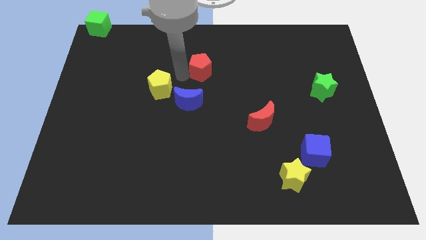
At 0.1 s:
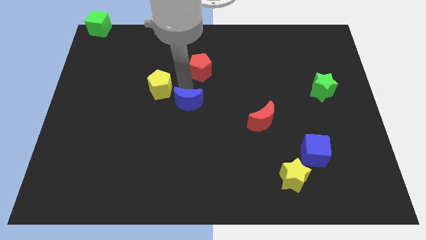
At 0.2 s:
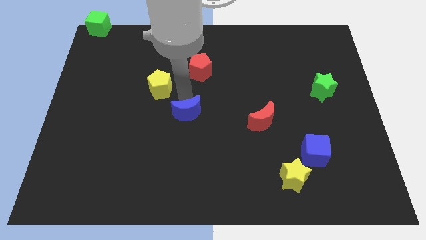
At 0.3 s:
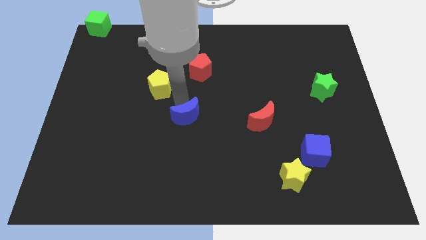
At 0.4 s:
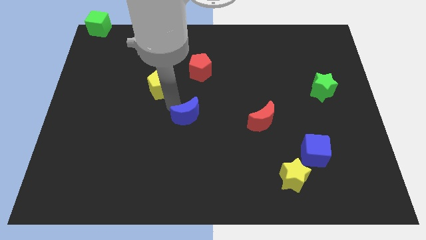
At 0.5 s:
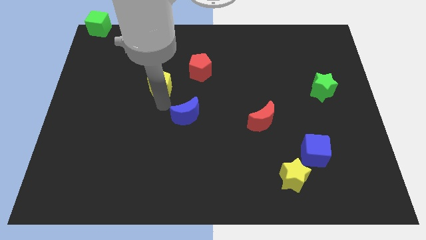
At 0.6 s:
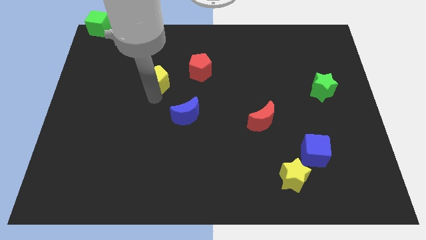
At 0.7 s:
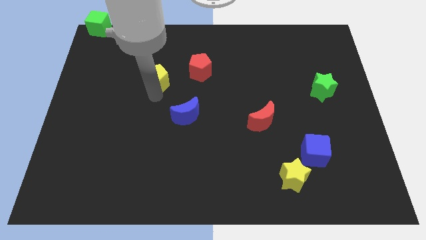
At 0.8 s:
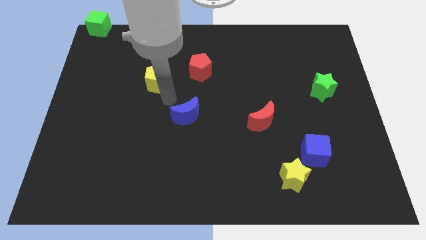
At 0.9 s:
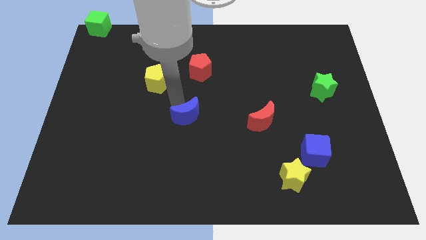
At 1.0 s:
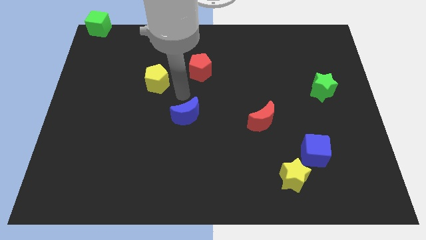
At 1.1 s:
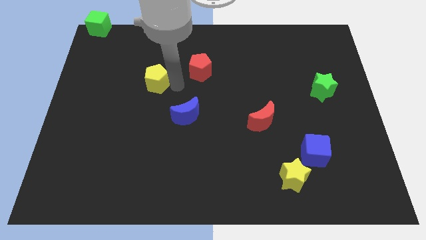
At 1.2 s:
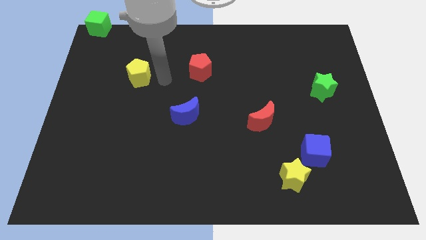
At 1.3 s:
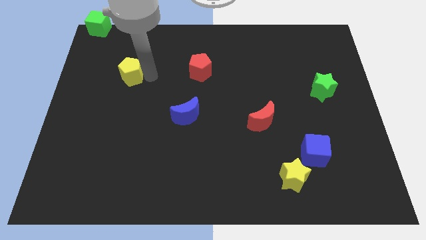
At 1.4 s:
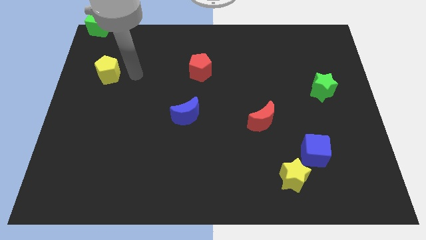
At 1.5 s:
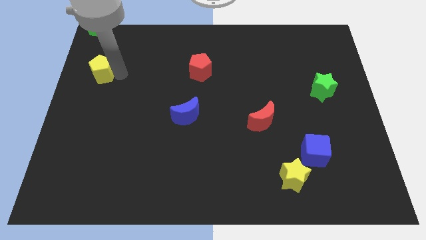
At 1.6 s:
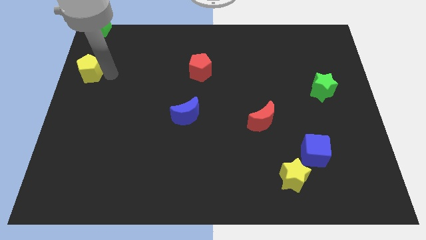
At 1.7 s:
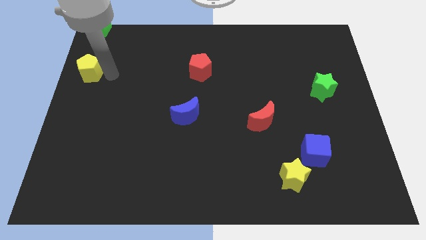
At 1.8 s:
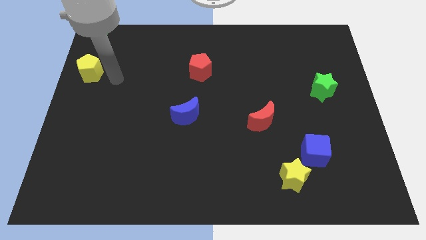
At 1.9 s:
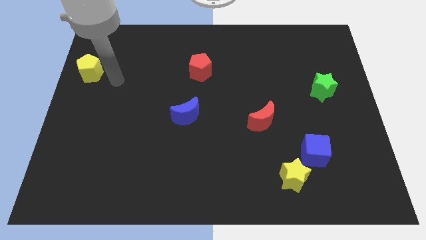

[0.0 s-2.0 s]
separate the yellow pentagon from the blue moon

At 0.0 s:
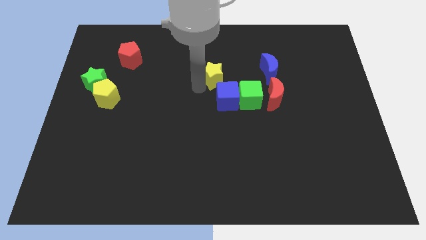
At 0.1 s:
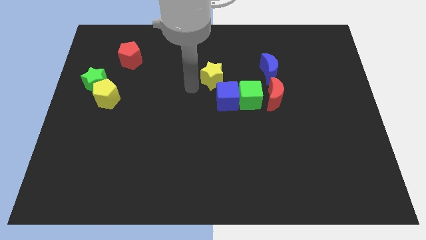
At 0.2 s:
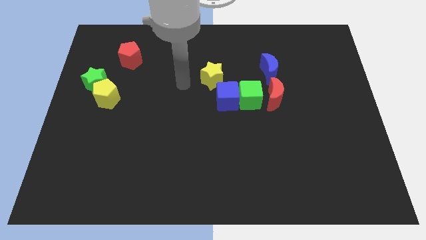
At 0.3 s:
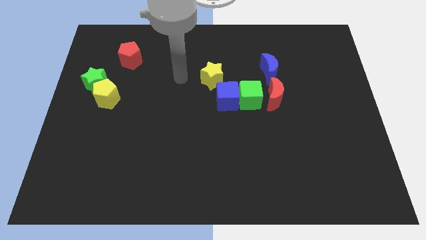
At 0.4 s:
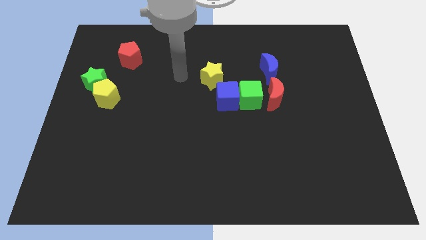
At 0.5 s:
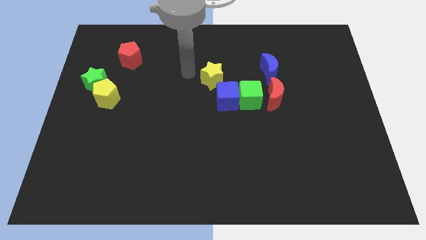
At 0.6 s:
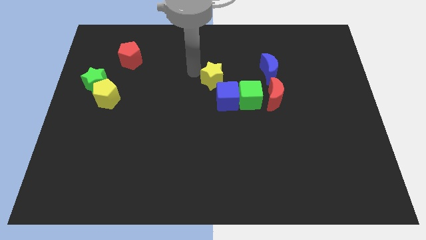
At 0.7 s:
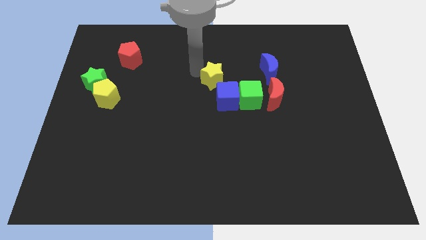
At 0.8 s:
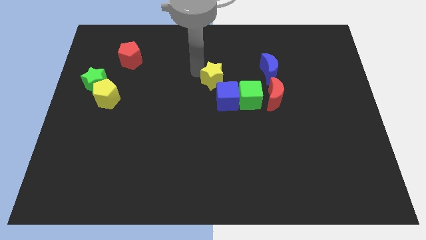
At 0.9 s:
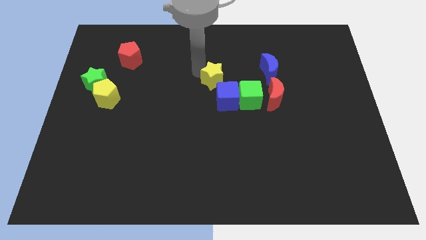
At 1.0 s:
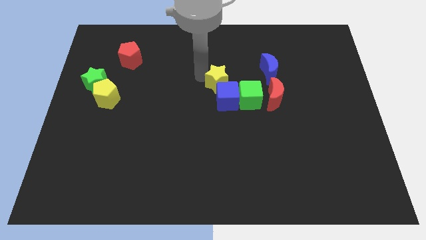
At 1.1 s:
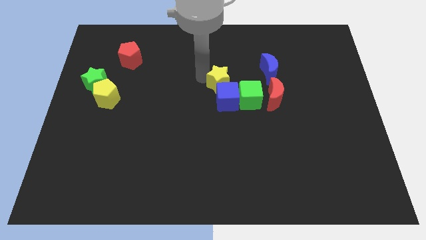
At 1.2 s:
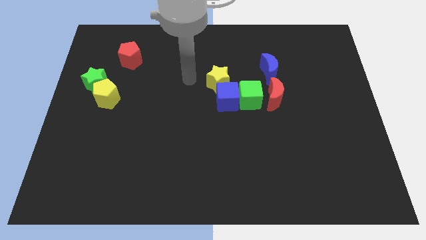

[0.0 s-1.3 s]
move the yellow star into the top side of the blue cube

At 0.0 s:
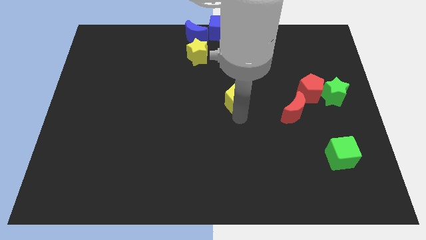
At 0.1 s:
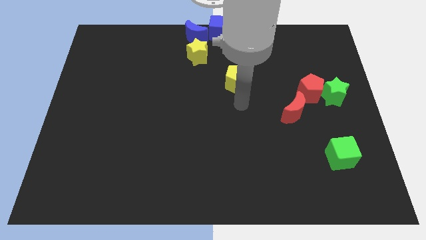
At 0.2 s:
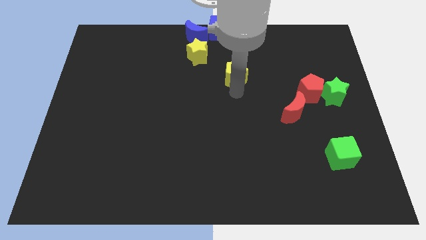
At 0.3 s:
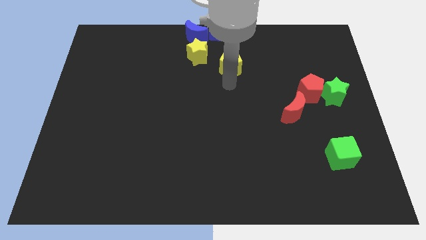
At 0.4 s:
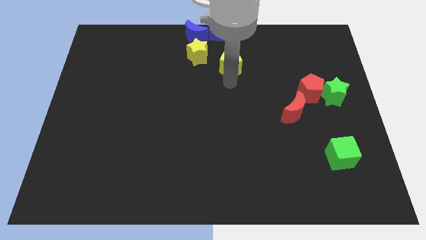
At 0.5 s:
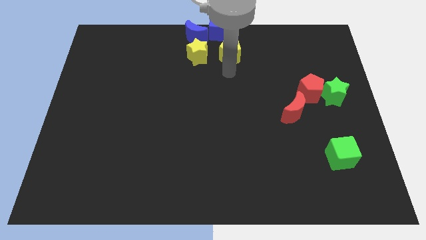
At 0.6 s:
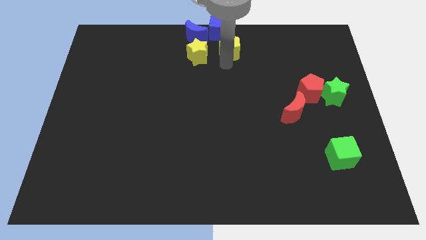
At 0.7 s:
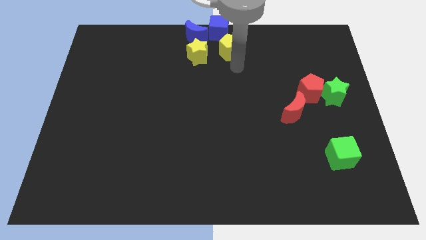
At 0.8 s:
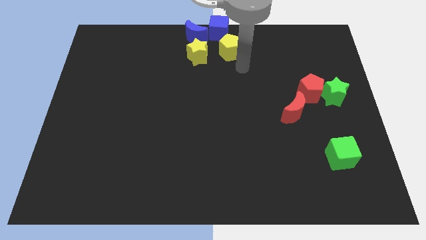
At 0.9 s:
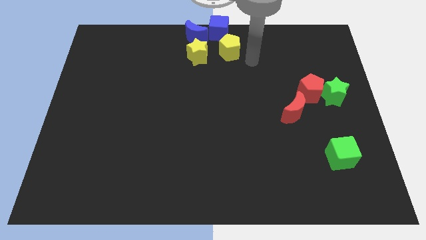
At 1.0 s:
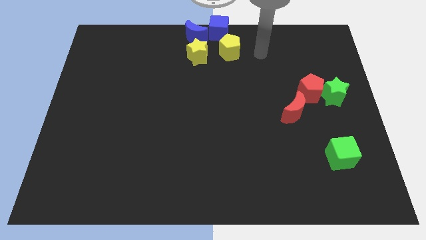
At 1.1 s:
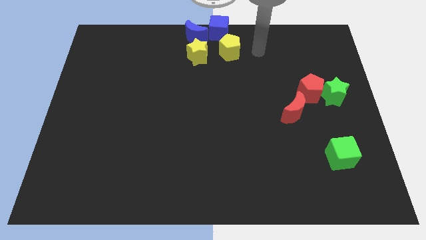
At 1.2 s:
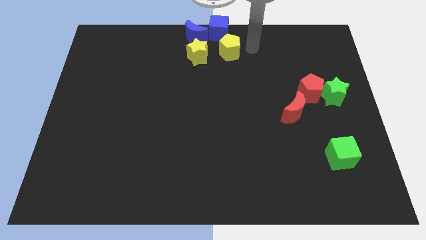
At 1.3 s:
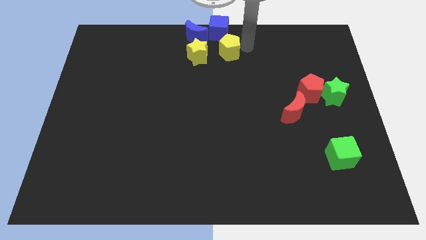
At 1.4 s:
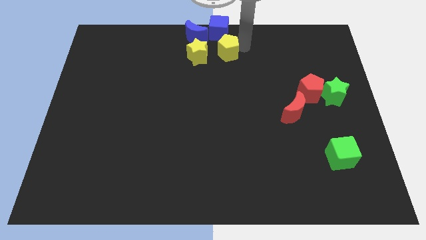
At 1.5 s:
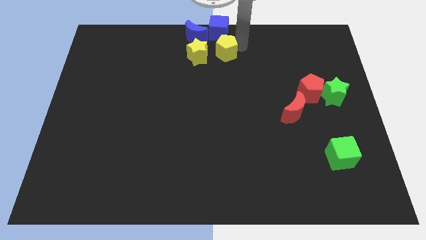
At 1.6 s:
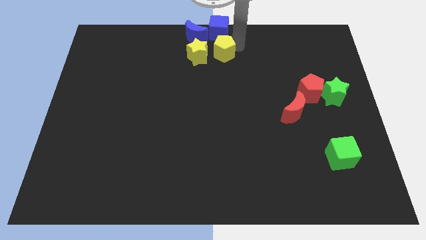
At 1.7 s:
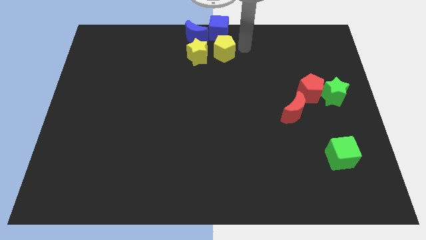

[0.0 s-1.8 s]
push yellow pentagon below blue cube

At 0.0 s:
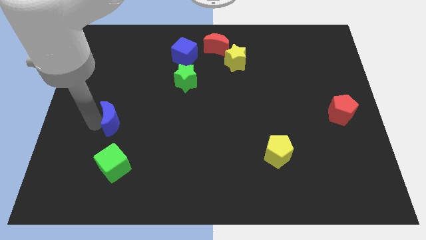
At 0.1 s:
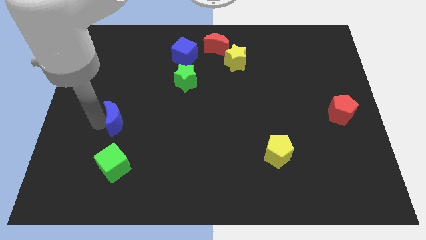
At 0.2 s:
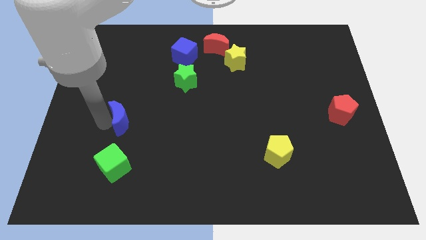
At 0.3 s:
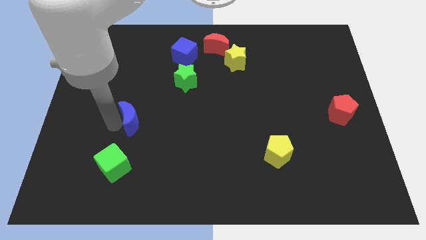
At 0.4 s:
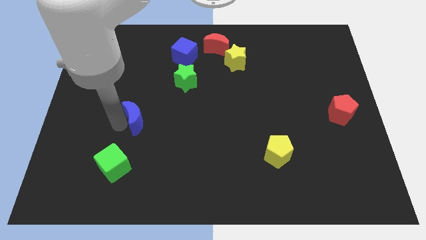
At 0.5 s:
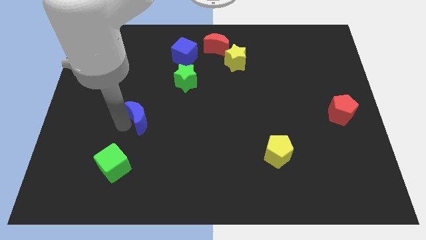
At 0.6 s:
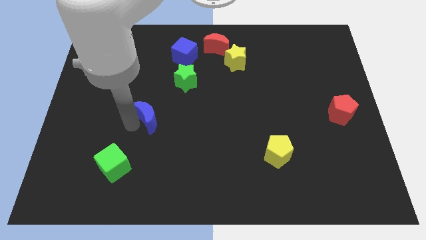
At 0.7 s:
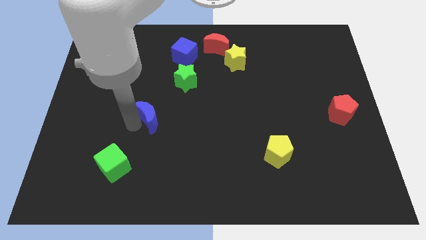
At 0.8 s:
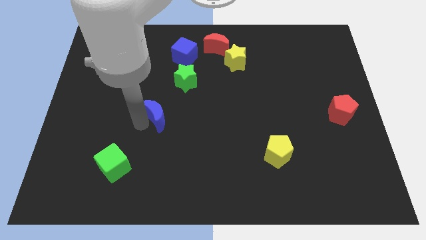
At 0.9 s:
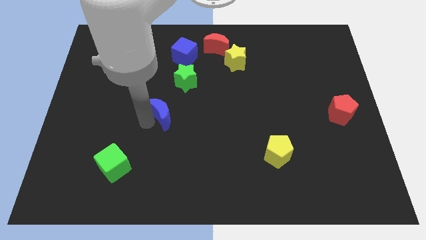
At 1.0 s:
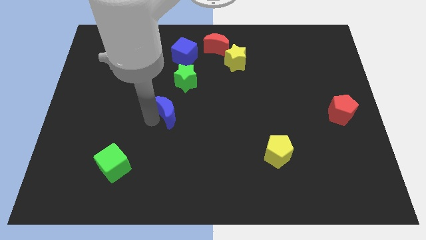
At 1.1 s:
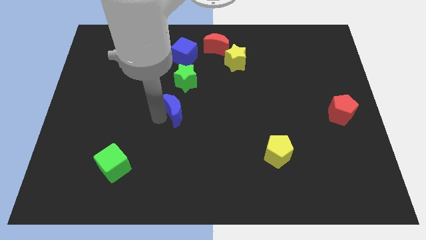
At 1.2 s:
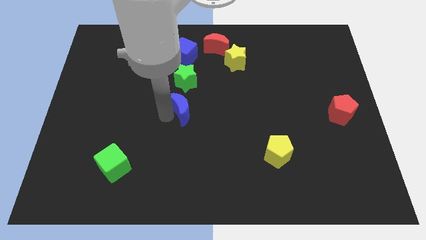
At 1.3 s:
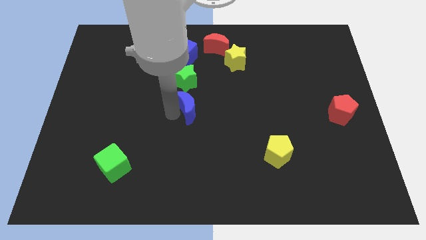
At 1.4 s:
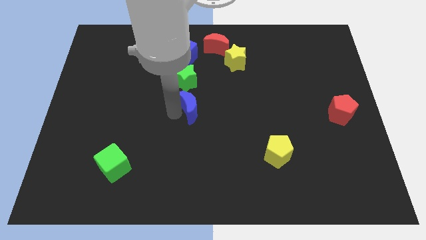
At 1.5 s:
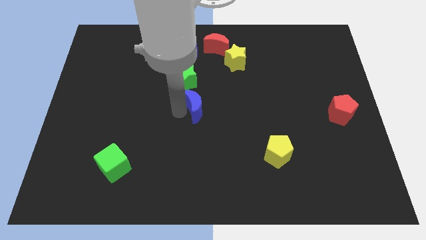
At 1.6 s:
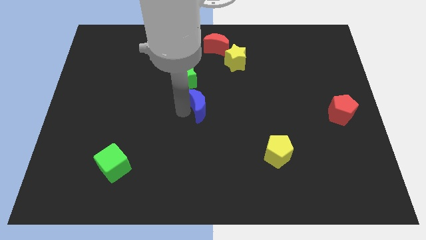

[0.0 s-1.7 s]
place blue moon to the bottom of green star

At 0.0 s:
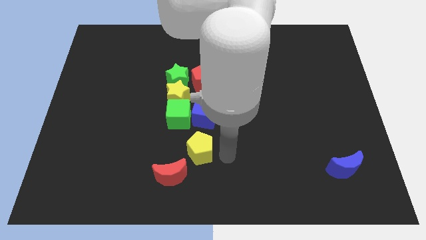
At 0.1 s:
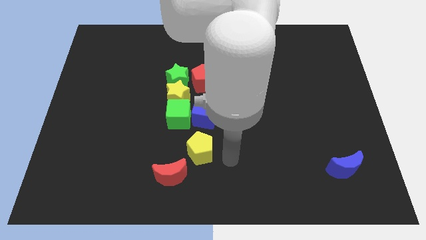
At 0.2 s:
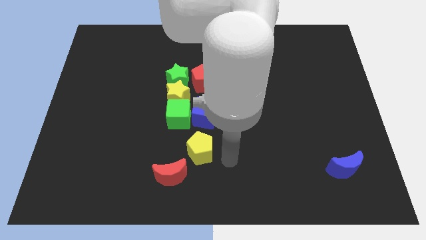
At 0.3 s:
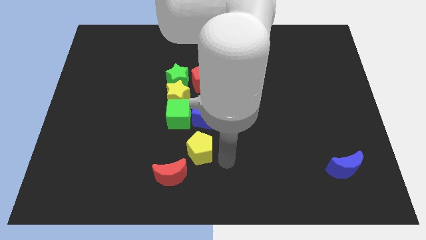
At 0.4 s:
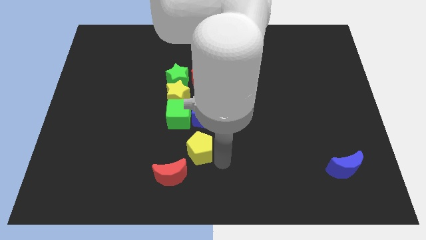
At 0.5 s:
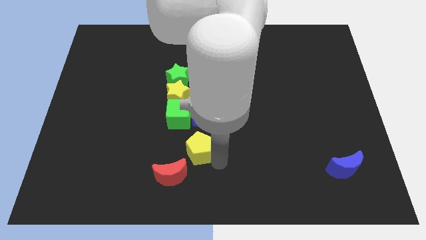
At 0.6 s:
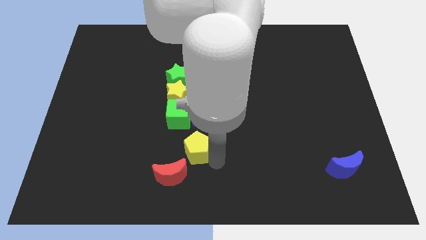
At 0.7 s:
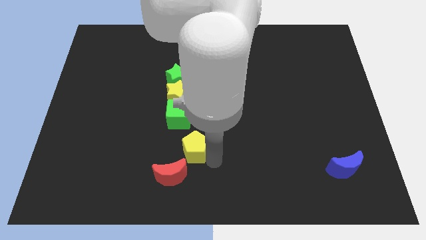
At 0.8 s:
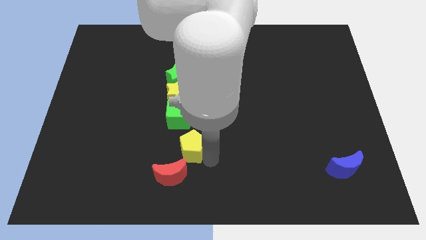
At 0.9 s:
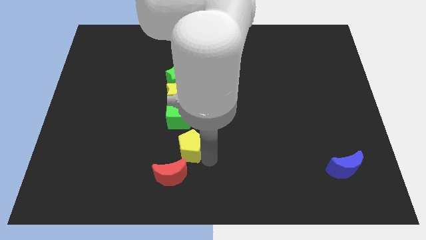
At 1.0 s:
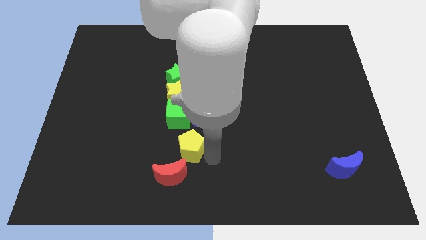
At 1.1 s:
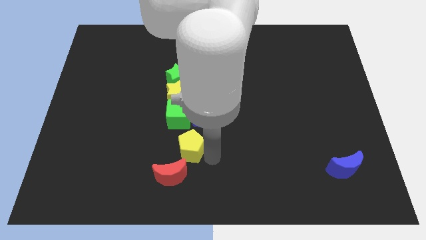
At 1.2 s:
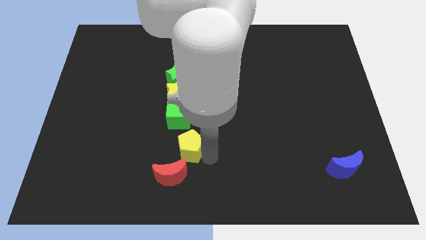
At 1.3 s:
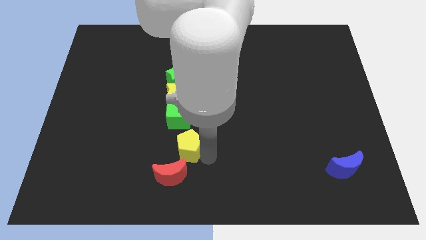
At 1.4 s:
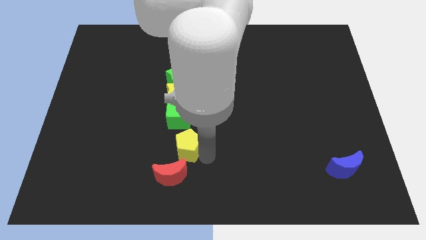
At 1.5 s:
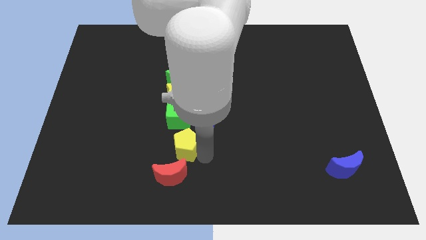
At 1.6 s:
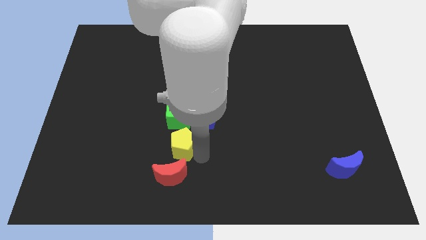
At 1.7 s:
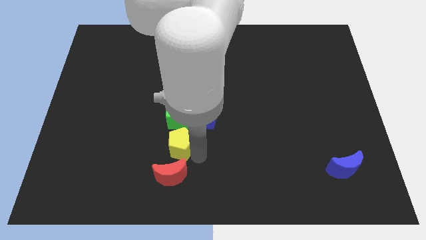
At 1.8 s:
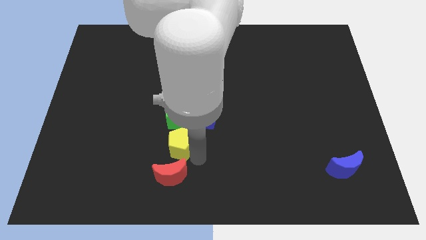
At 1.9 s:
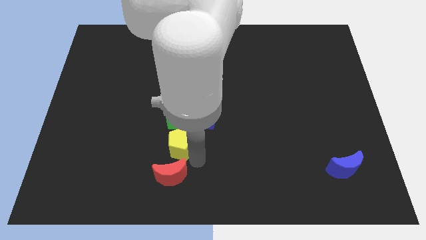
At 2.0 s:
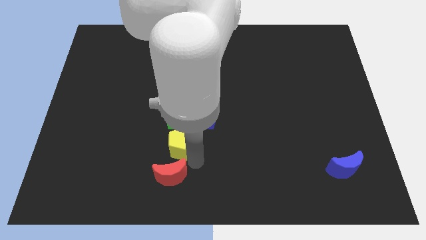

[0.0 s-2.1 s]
place the yellow pentagon in between the green cube and the red moon
